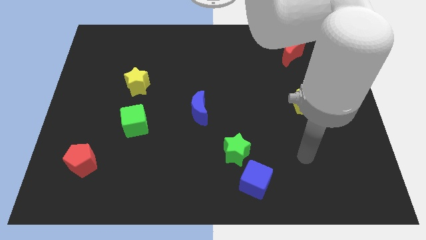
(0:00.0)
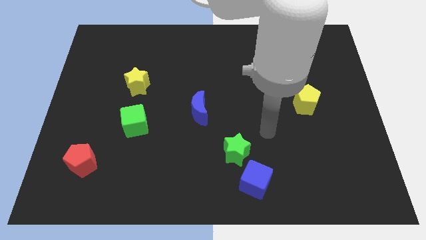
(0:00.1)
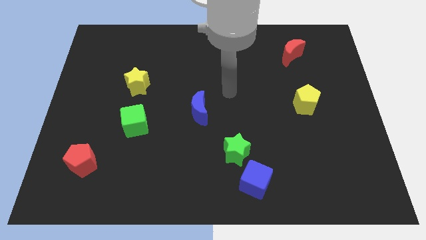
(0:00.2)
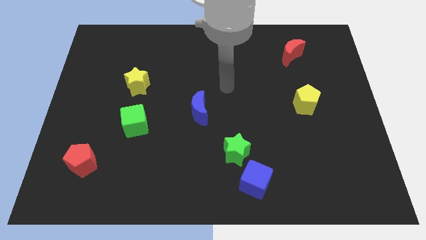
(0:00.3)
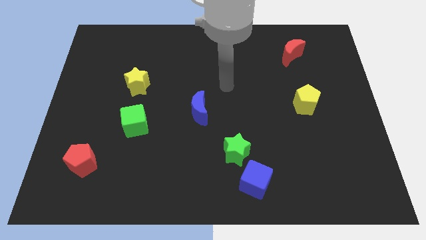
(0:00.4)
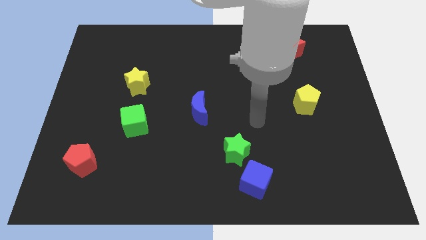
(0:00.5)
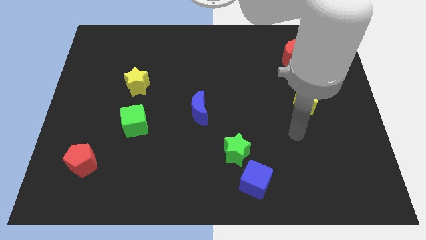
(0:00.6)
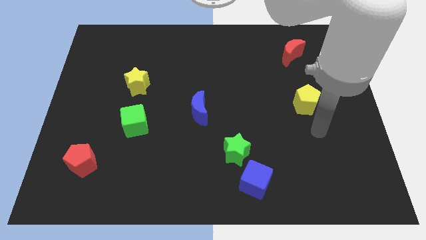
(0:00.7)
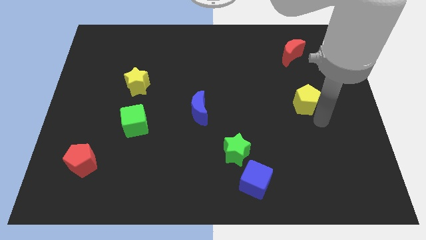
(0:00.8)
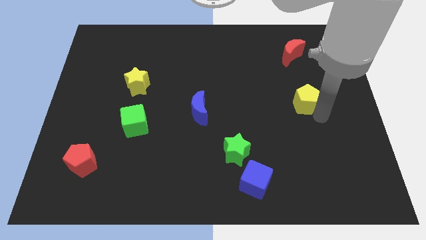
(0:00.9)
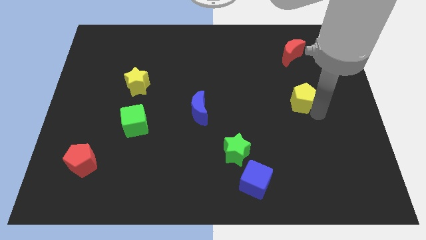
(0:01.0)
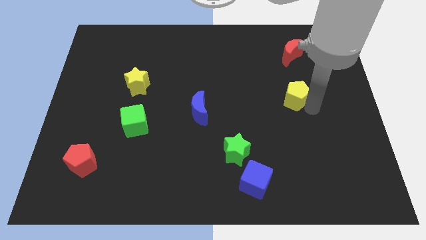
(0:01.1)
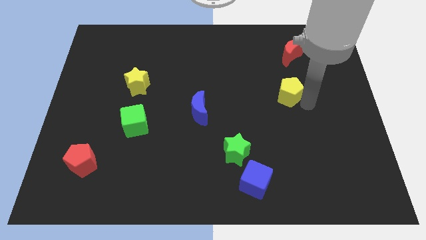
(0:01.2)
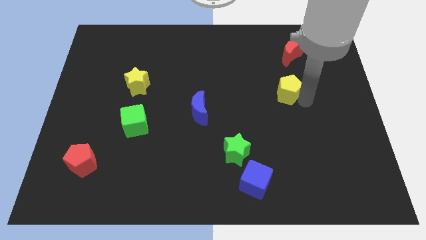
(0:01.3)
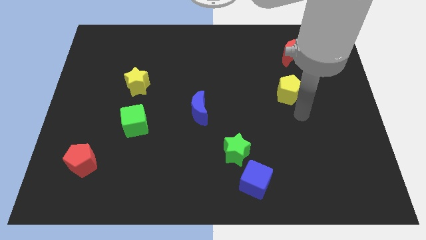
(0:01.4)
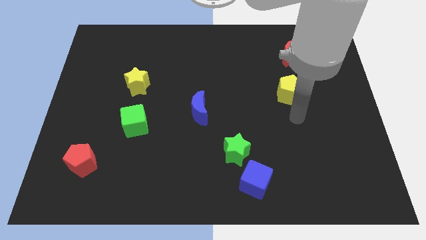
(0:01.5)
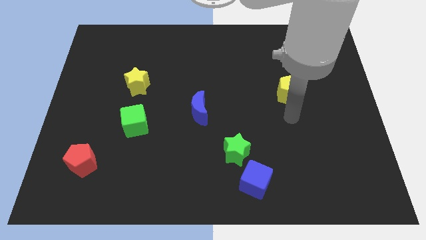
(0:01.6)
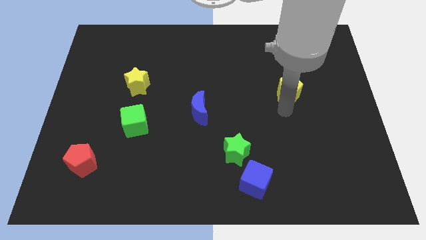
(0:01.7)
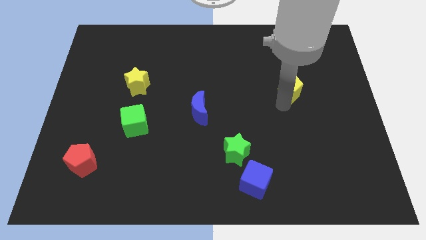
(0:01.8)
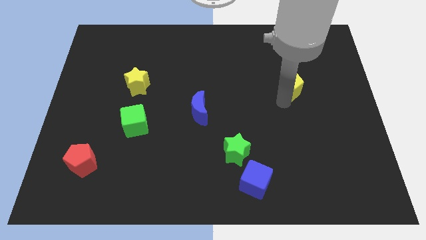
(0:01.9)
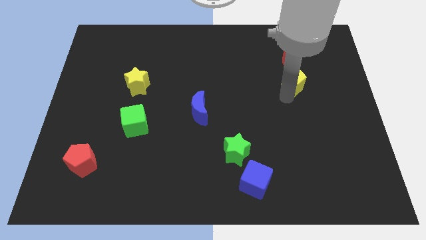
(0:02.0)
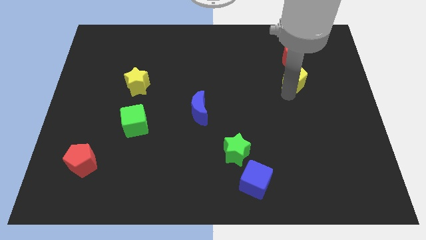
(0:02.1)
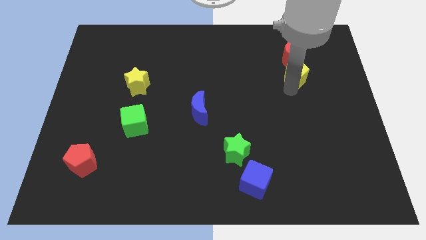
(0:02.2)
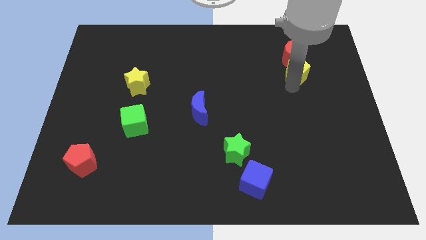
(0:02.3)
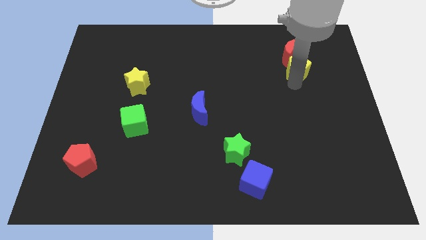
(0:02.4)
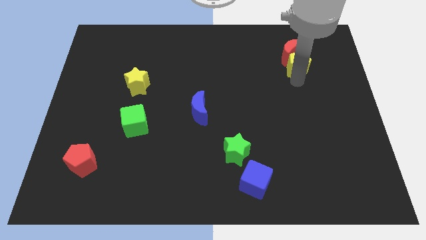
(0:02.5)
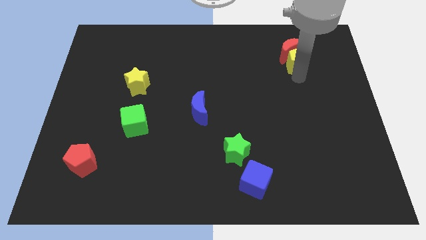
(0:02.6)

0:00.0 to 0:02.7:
move the yellow pentagon close to the red moon

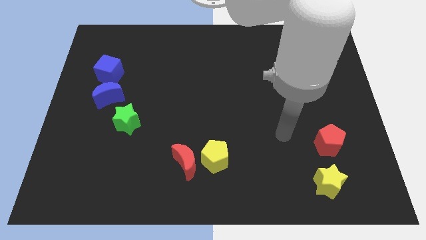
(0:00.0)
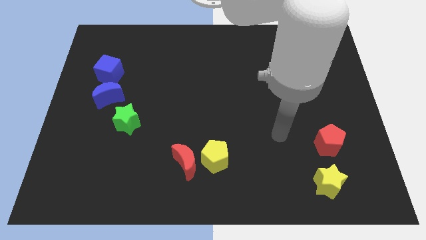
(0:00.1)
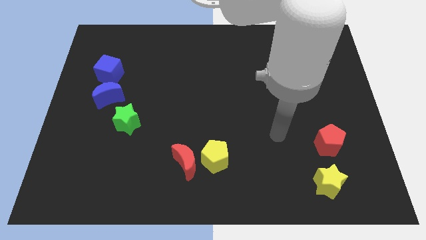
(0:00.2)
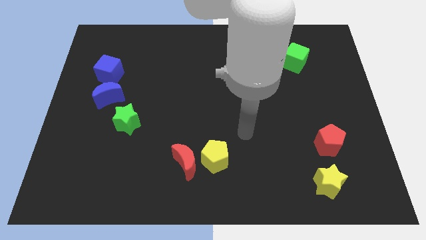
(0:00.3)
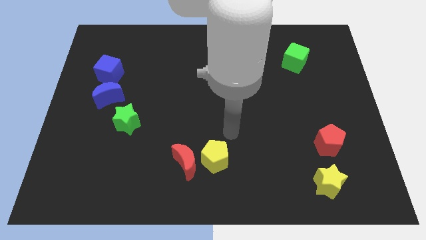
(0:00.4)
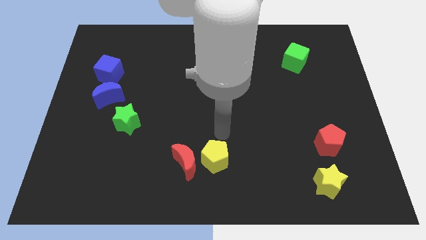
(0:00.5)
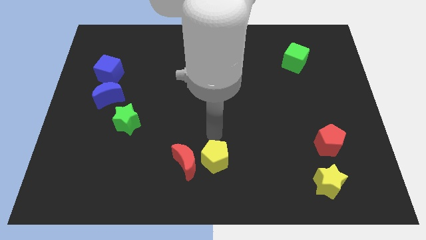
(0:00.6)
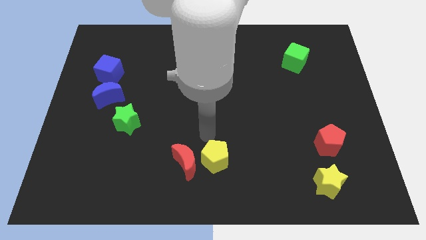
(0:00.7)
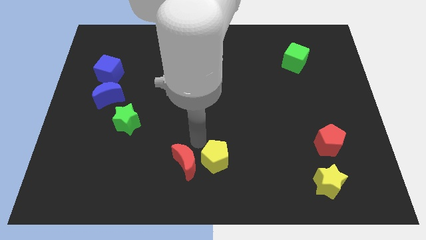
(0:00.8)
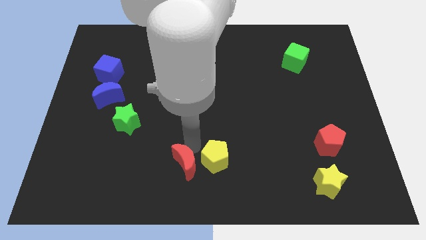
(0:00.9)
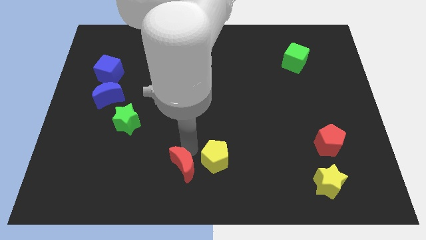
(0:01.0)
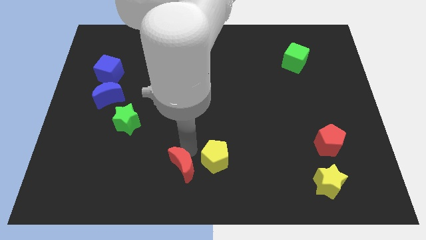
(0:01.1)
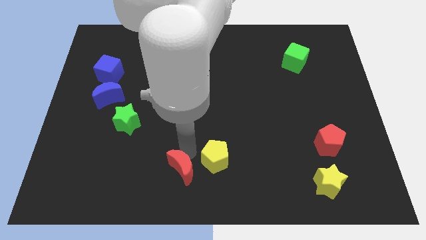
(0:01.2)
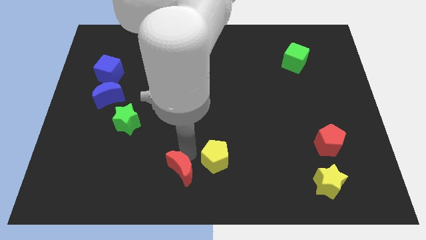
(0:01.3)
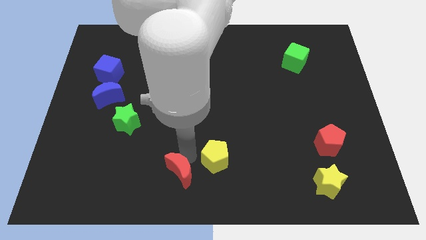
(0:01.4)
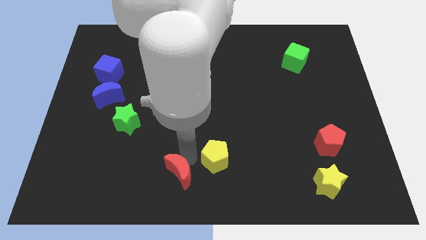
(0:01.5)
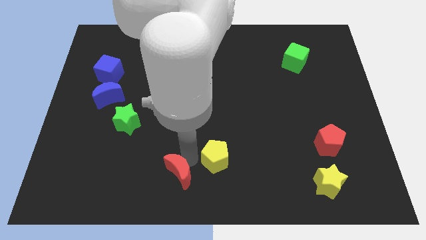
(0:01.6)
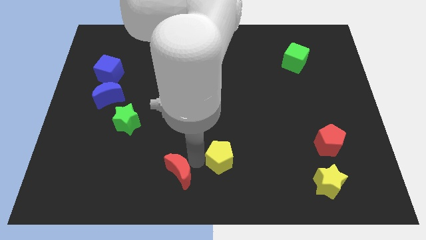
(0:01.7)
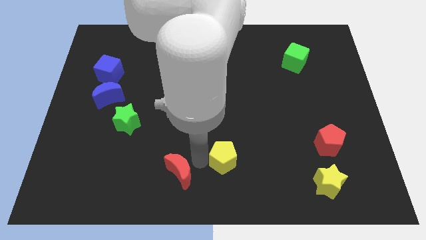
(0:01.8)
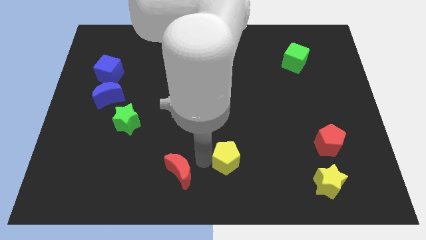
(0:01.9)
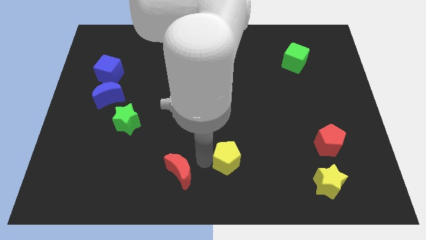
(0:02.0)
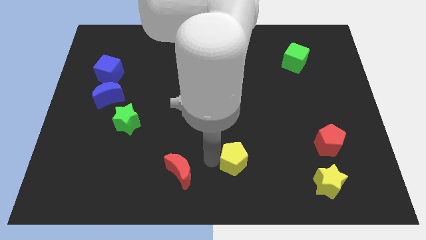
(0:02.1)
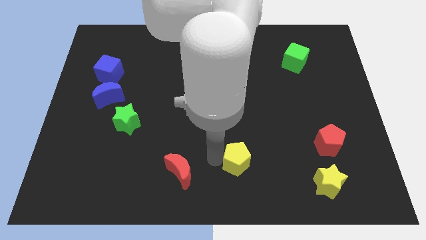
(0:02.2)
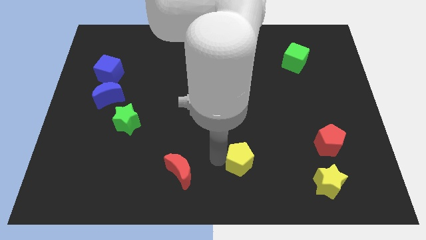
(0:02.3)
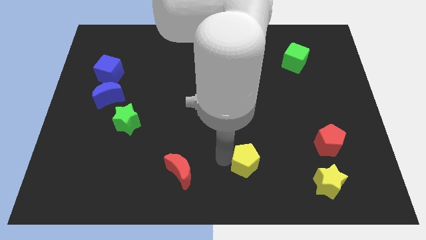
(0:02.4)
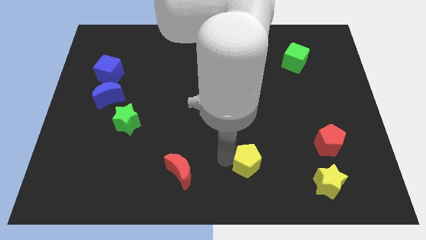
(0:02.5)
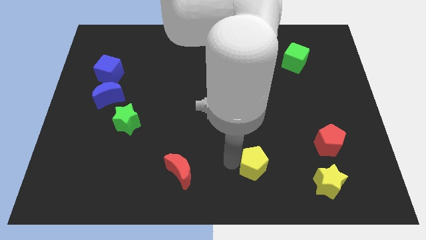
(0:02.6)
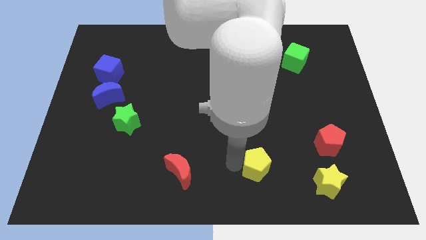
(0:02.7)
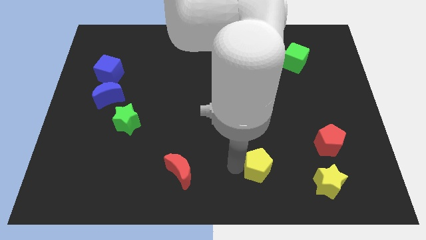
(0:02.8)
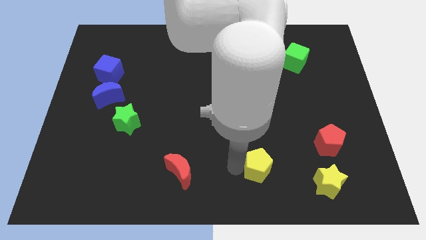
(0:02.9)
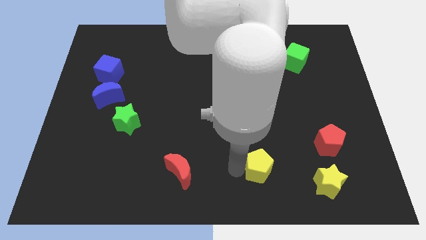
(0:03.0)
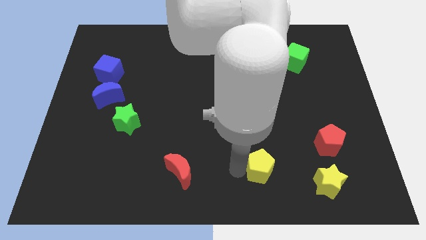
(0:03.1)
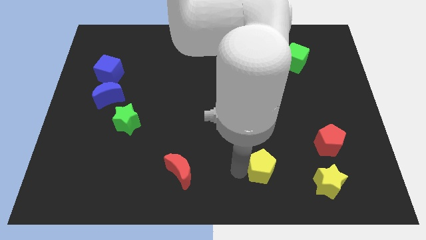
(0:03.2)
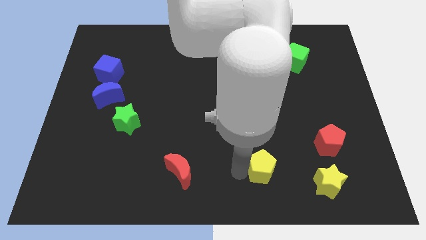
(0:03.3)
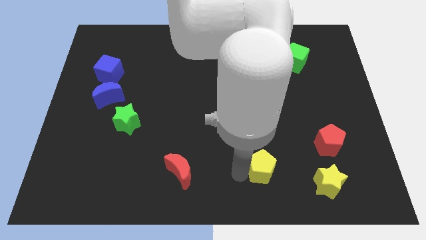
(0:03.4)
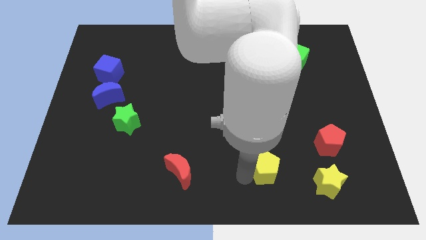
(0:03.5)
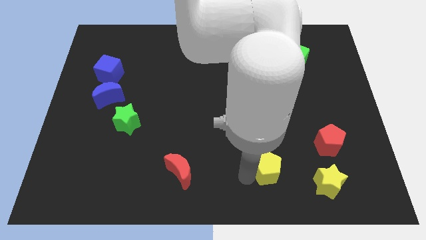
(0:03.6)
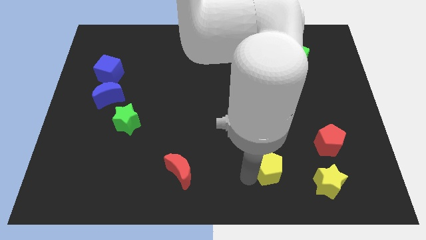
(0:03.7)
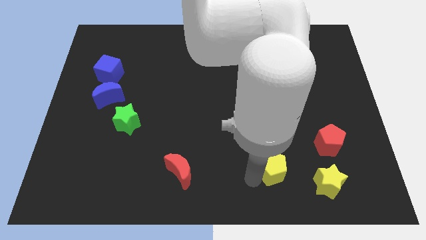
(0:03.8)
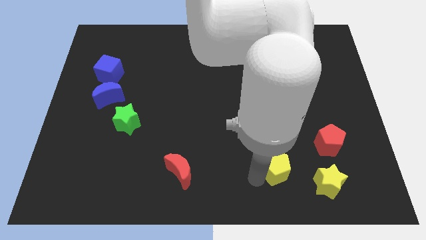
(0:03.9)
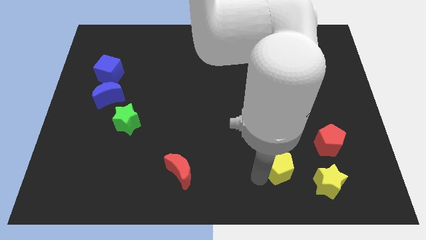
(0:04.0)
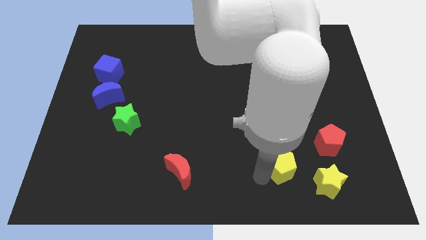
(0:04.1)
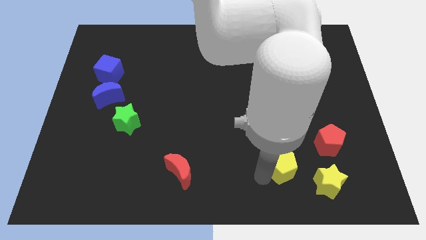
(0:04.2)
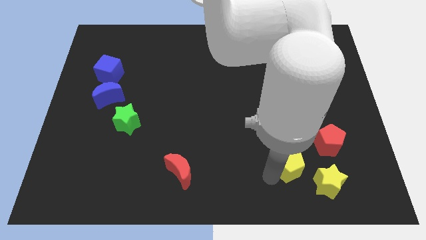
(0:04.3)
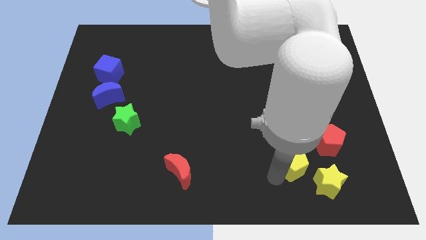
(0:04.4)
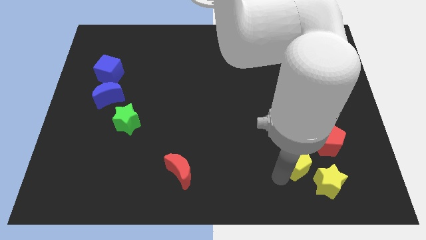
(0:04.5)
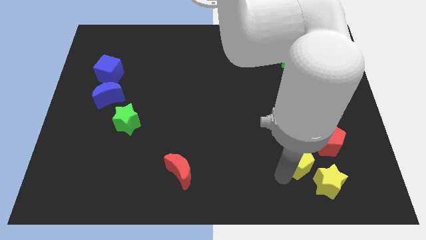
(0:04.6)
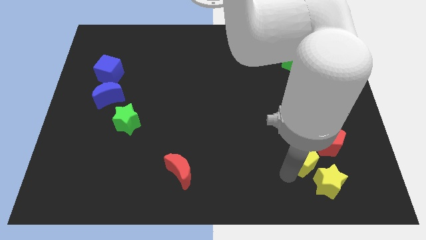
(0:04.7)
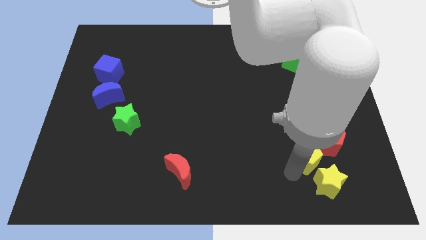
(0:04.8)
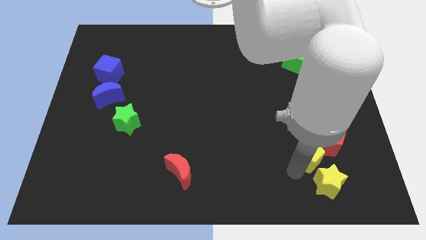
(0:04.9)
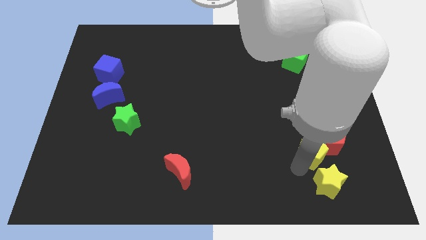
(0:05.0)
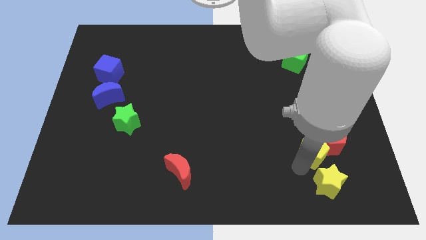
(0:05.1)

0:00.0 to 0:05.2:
move the yellow pentagon towards the red pentagon

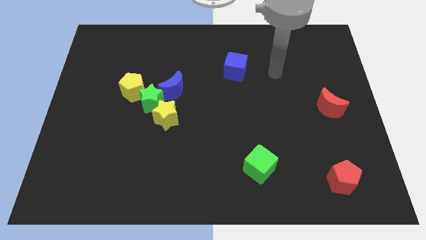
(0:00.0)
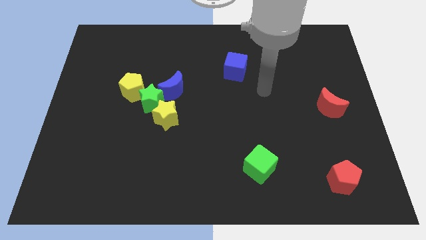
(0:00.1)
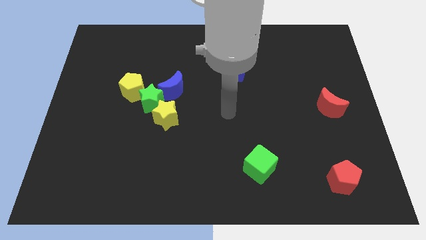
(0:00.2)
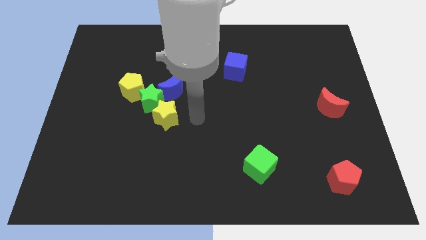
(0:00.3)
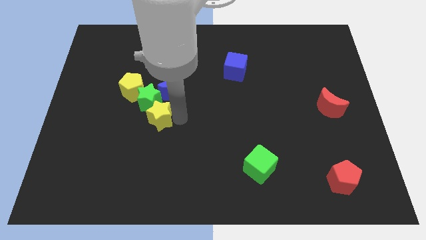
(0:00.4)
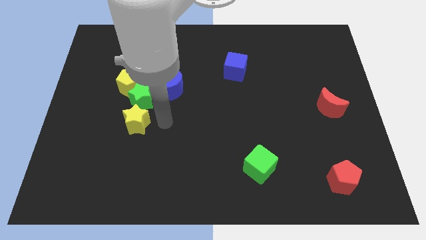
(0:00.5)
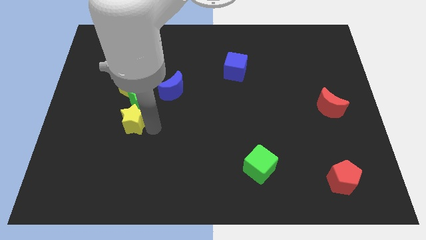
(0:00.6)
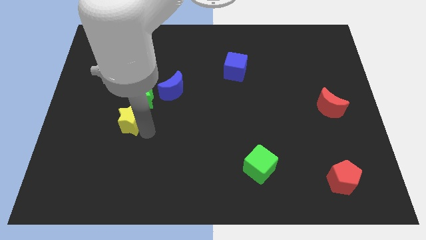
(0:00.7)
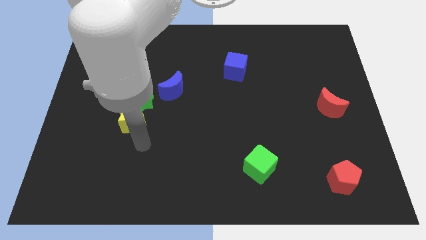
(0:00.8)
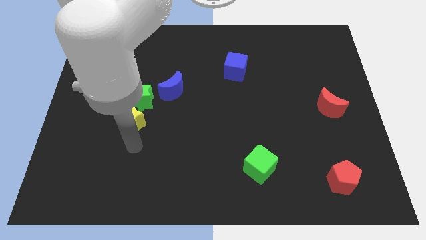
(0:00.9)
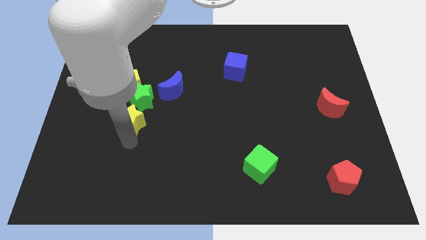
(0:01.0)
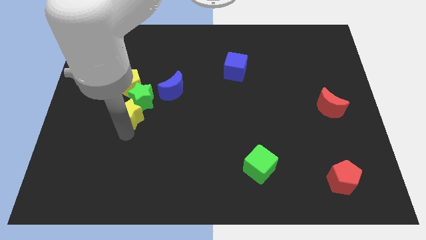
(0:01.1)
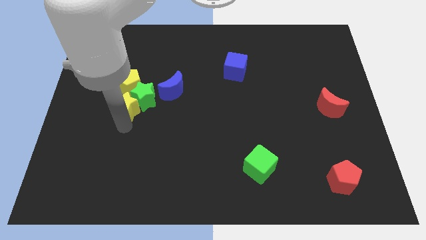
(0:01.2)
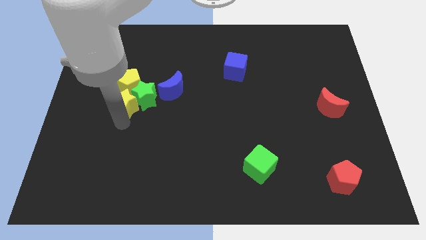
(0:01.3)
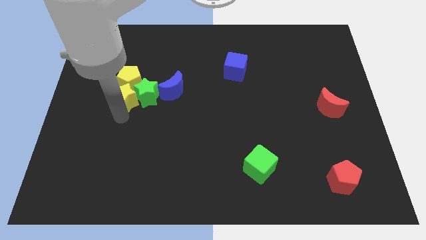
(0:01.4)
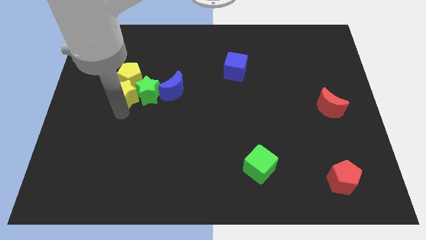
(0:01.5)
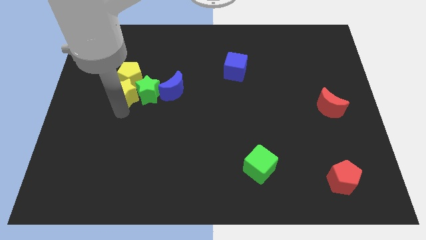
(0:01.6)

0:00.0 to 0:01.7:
push the yellow star towards the yellow pentagon
